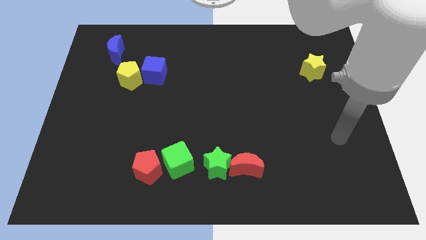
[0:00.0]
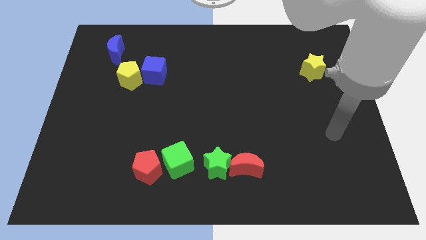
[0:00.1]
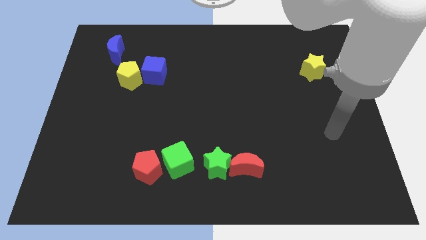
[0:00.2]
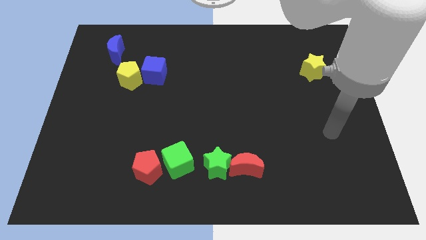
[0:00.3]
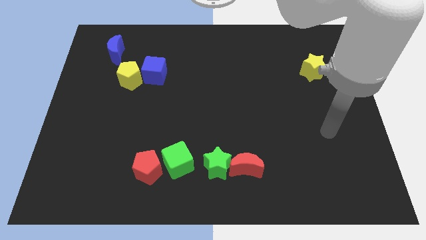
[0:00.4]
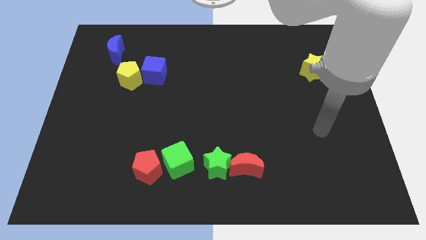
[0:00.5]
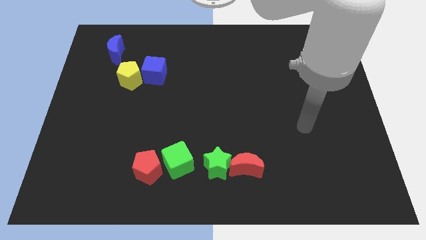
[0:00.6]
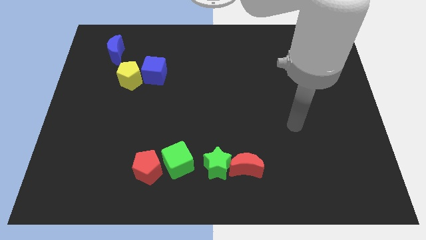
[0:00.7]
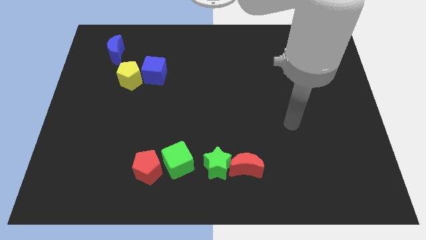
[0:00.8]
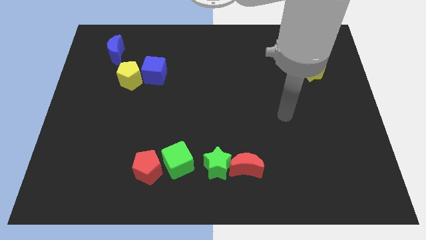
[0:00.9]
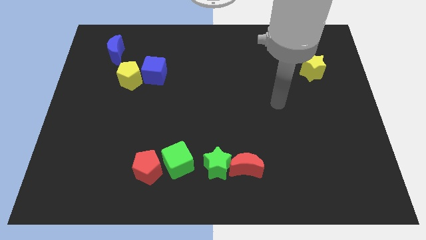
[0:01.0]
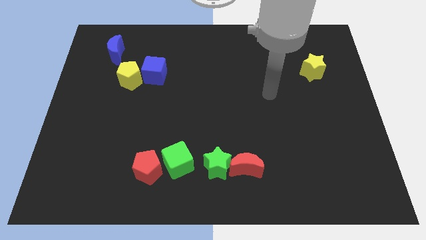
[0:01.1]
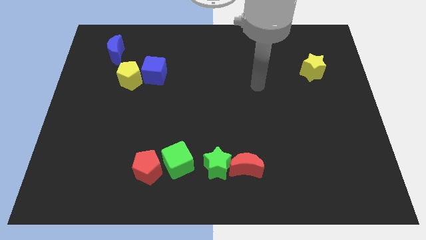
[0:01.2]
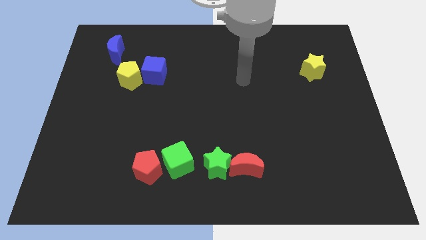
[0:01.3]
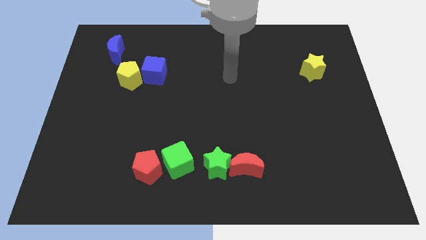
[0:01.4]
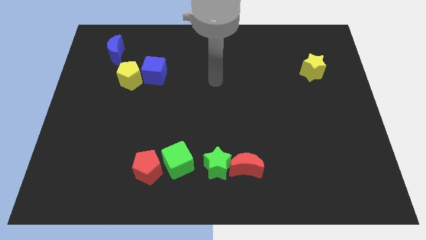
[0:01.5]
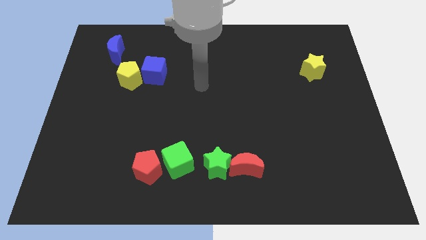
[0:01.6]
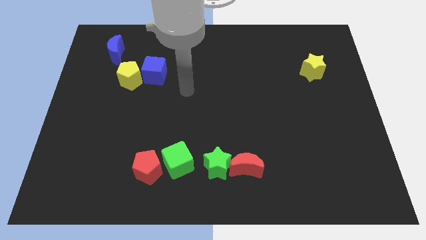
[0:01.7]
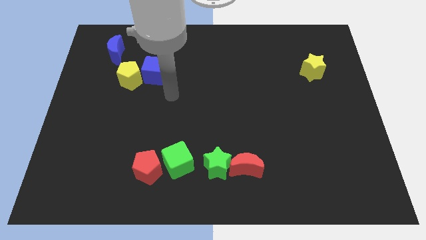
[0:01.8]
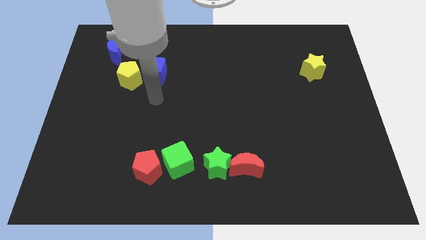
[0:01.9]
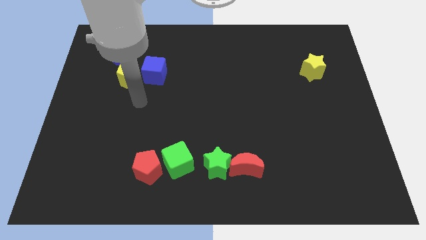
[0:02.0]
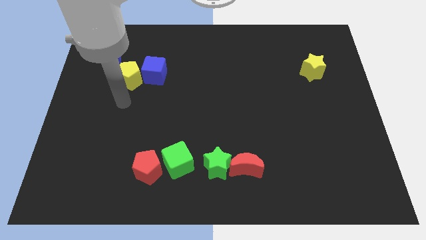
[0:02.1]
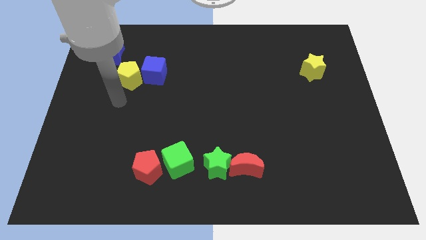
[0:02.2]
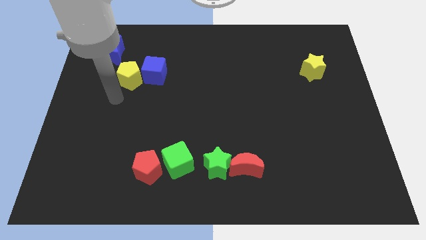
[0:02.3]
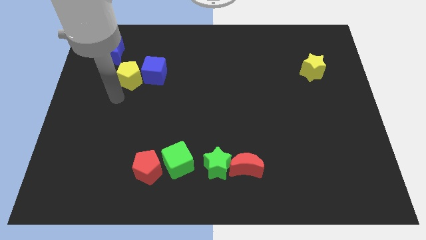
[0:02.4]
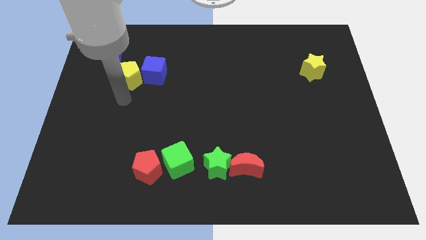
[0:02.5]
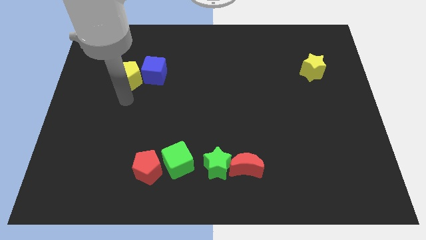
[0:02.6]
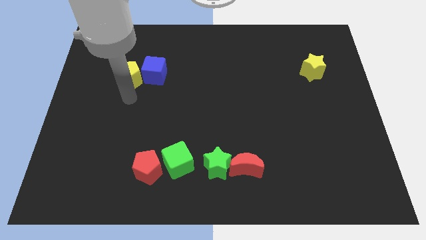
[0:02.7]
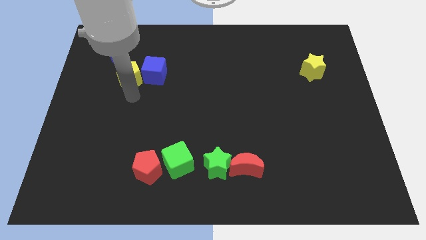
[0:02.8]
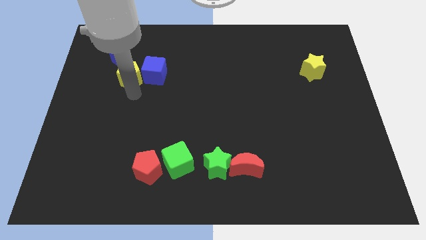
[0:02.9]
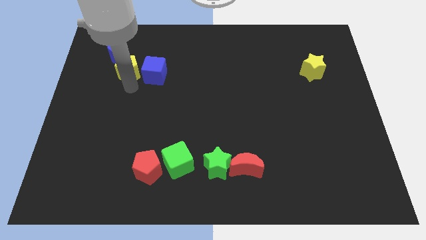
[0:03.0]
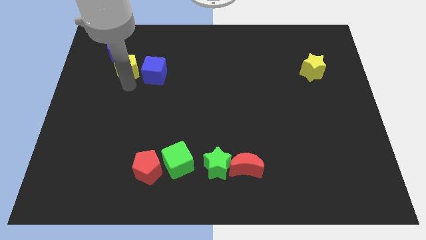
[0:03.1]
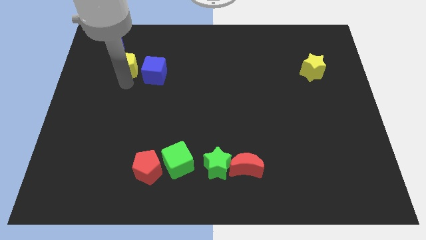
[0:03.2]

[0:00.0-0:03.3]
move the yellow pentagon left to the blue cube

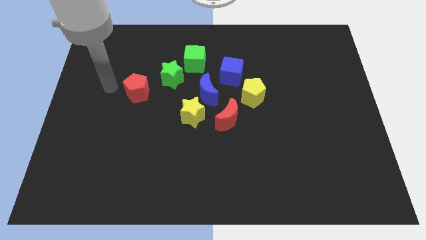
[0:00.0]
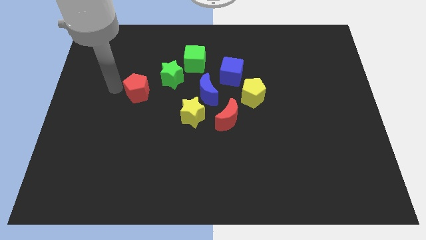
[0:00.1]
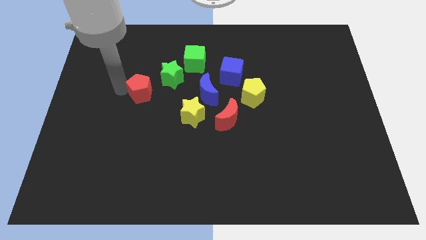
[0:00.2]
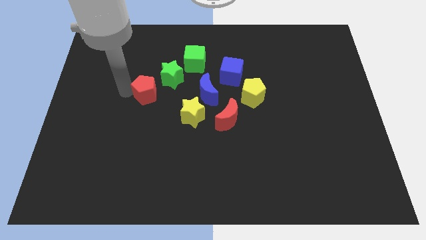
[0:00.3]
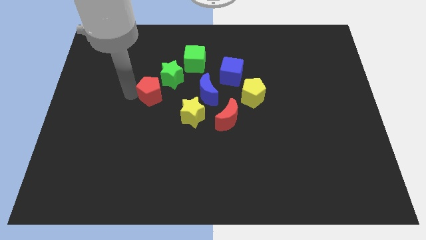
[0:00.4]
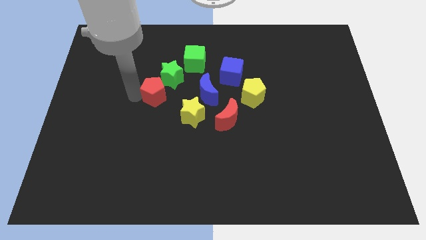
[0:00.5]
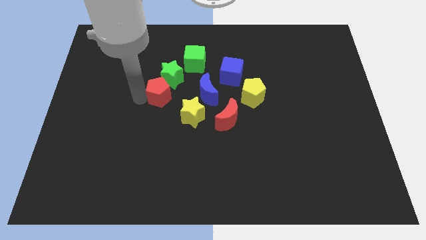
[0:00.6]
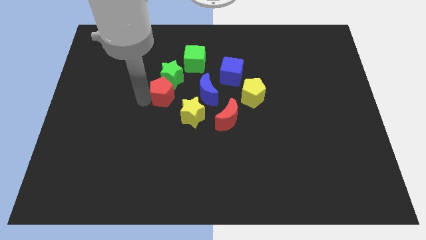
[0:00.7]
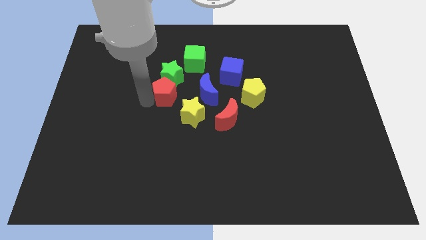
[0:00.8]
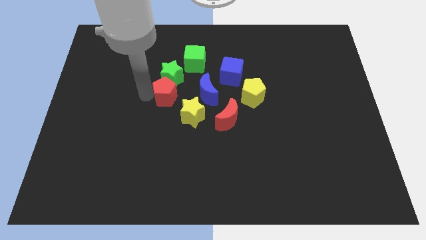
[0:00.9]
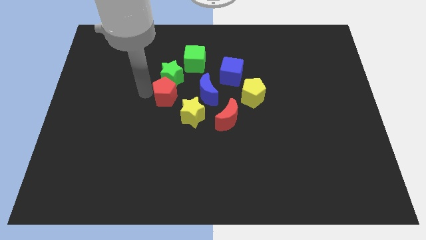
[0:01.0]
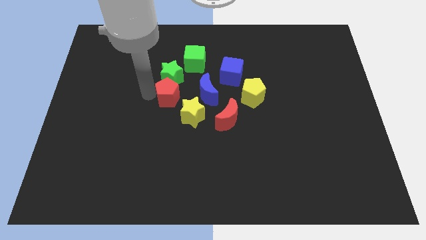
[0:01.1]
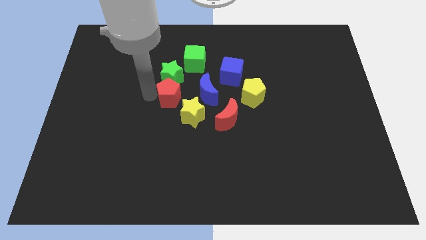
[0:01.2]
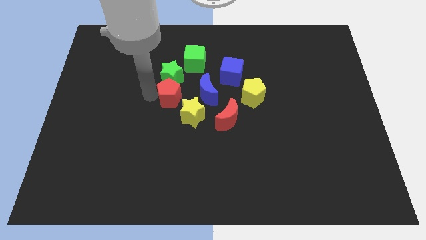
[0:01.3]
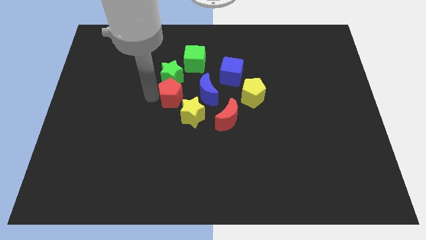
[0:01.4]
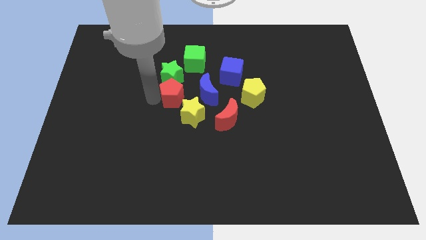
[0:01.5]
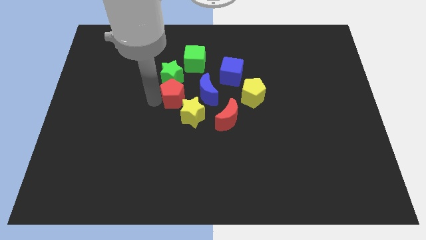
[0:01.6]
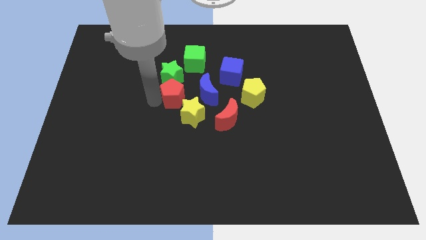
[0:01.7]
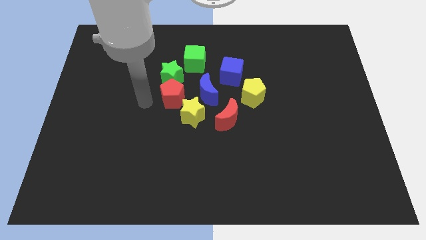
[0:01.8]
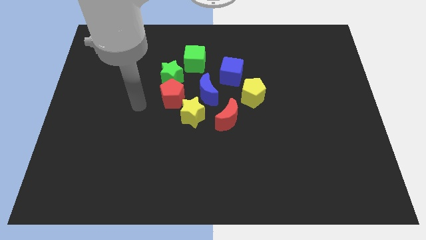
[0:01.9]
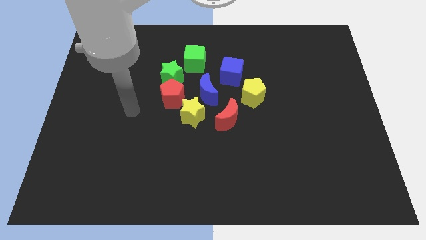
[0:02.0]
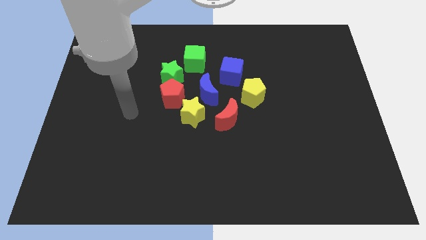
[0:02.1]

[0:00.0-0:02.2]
place the red pentagon diagonal to the yellow star

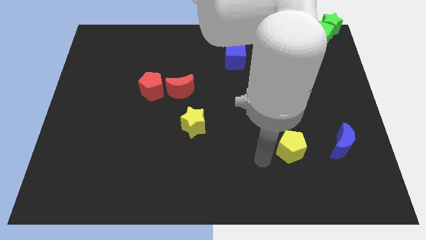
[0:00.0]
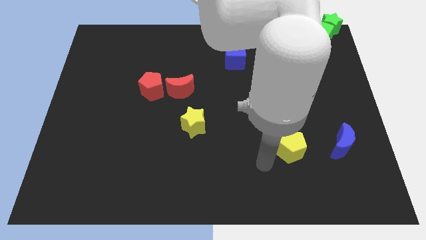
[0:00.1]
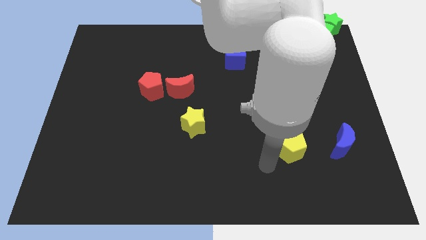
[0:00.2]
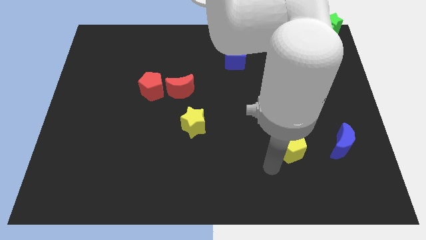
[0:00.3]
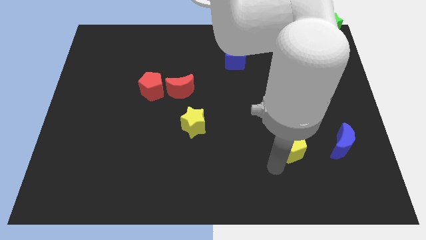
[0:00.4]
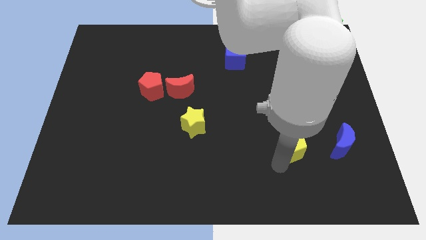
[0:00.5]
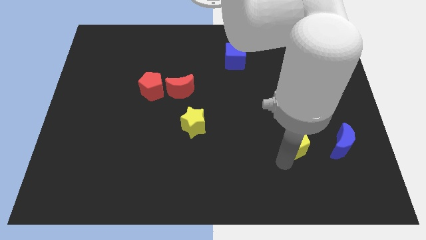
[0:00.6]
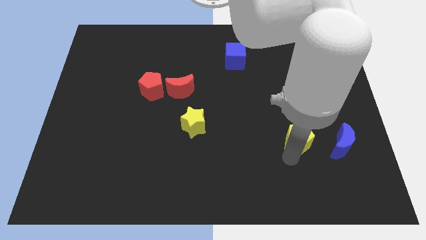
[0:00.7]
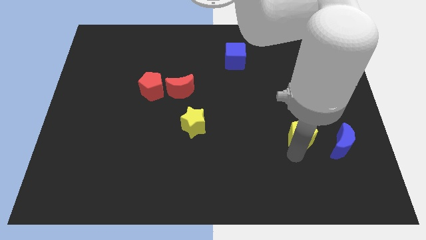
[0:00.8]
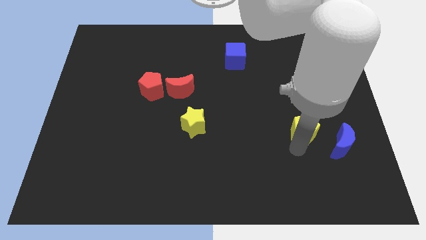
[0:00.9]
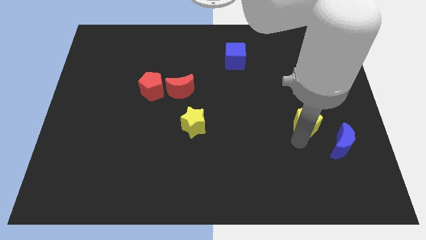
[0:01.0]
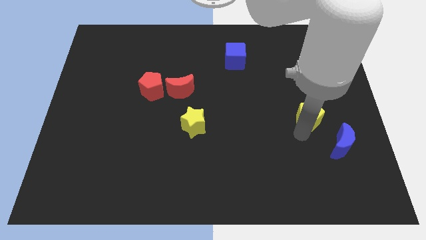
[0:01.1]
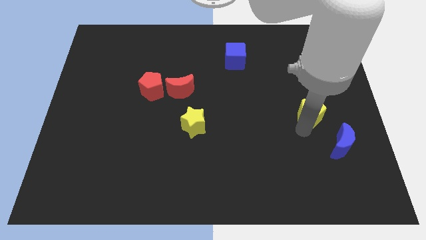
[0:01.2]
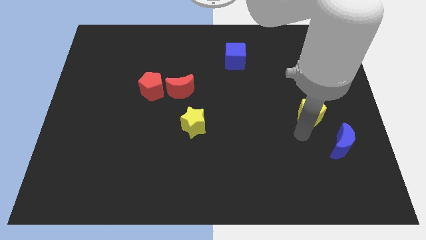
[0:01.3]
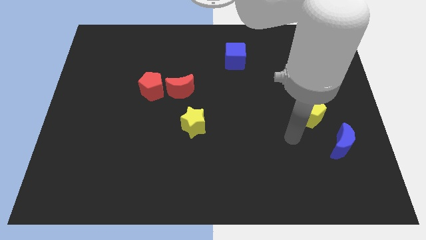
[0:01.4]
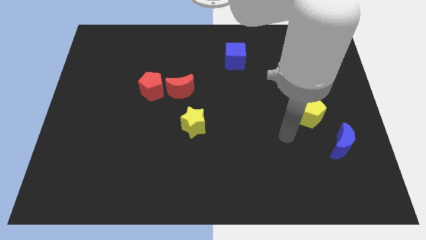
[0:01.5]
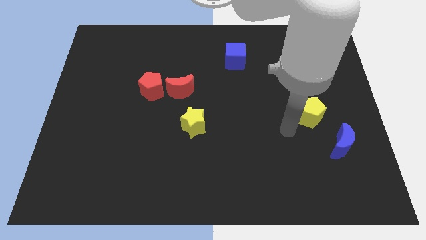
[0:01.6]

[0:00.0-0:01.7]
push the yellow pentagon to the top left side of the blue moon

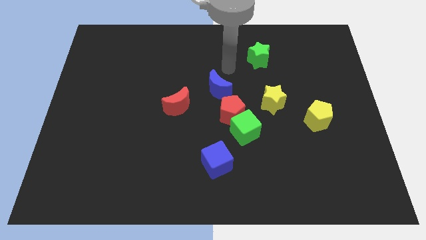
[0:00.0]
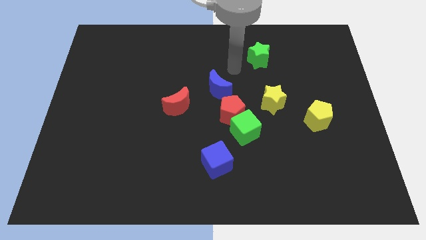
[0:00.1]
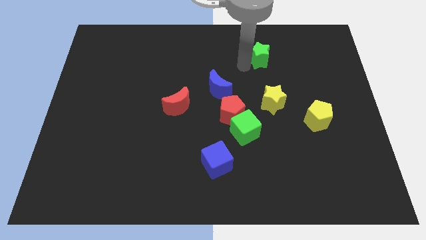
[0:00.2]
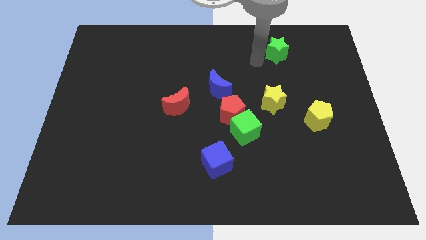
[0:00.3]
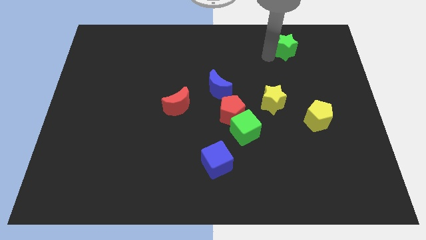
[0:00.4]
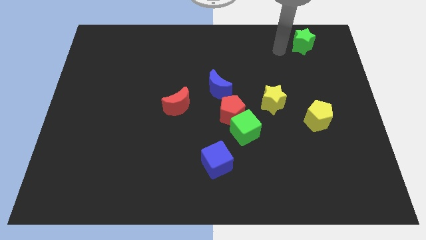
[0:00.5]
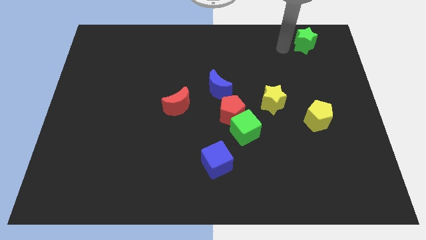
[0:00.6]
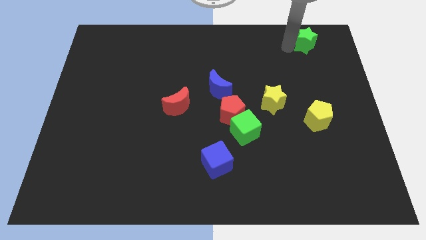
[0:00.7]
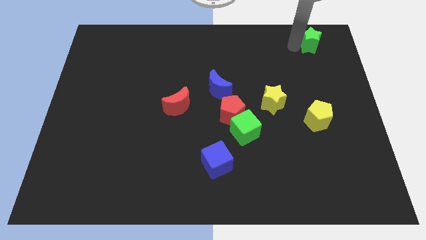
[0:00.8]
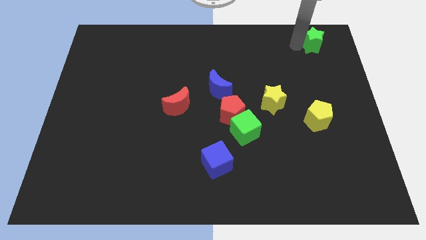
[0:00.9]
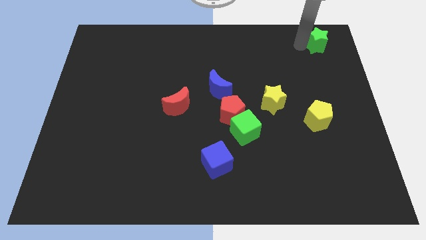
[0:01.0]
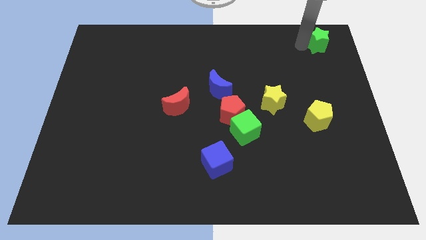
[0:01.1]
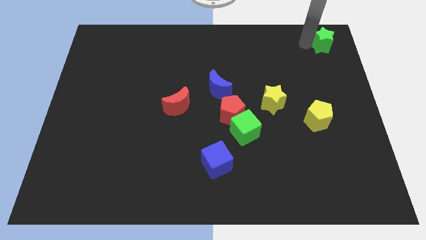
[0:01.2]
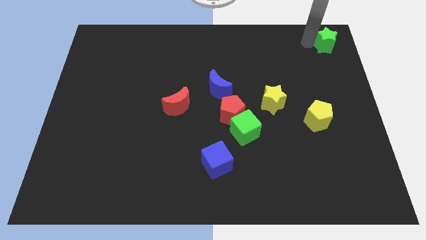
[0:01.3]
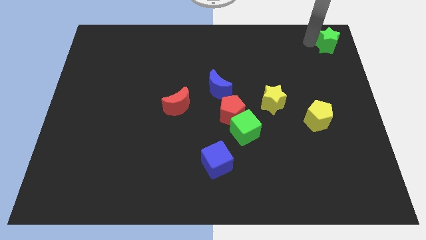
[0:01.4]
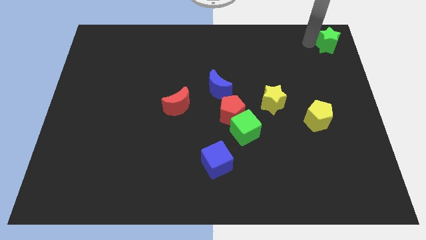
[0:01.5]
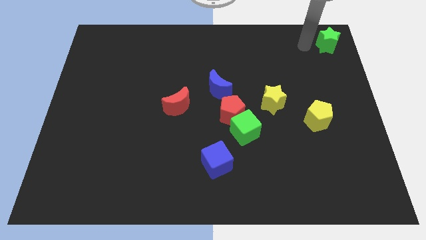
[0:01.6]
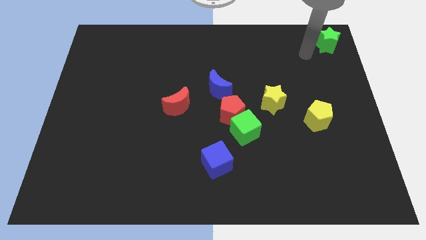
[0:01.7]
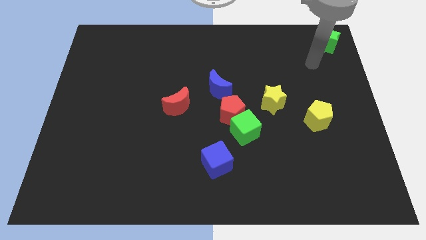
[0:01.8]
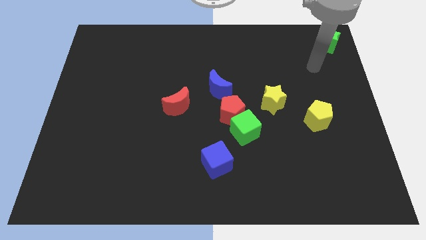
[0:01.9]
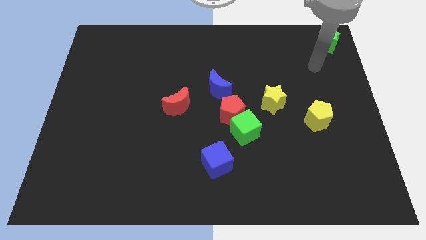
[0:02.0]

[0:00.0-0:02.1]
move the green star diagonally up
